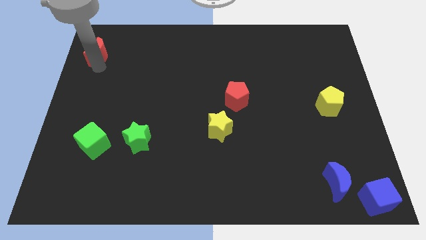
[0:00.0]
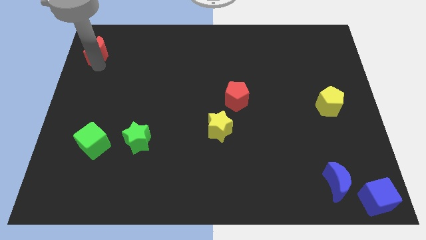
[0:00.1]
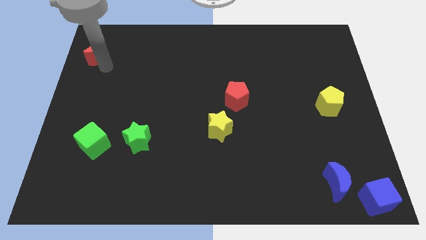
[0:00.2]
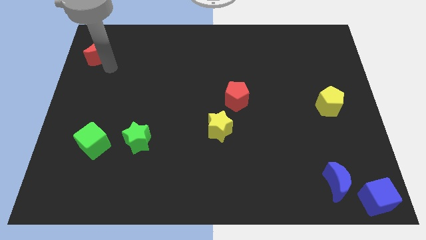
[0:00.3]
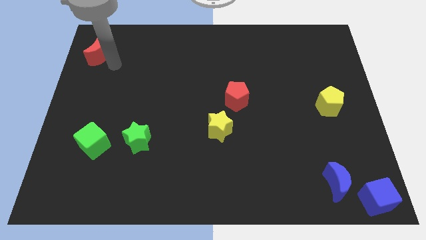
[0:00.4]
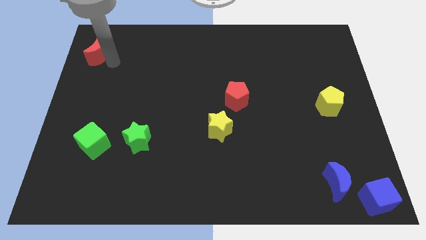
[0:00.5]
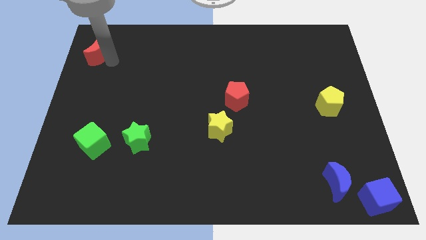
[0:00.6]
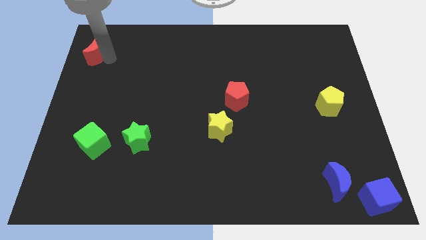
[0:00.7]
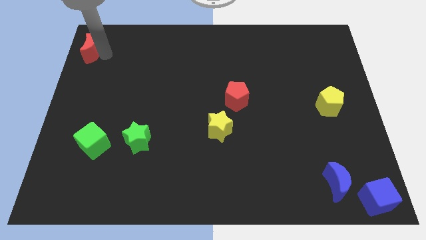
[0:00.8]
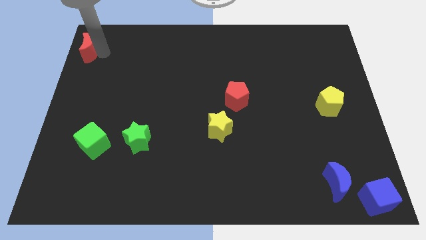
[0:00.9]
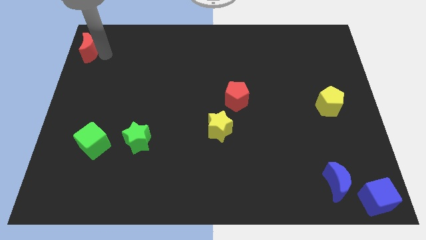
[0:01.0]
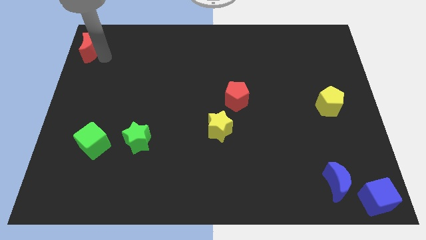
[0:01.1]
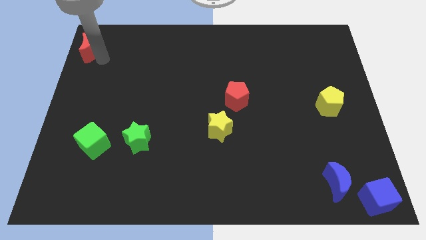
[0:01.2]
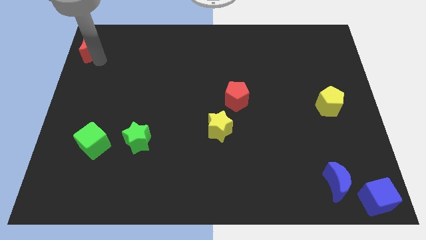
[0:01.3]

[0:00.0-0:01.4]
drag the red moon to the top left

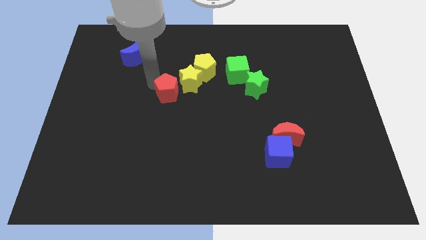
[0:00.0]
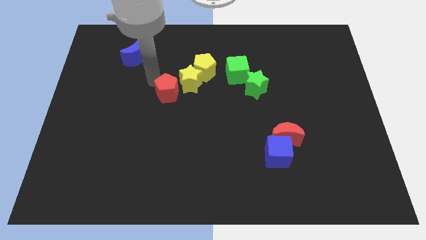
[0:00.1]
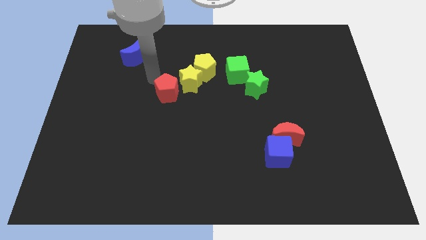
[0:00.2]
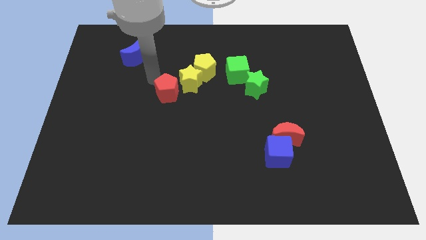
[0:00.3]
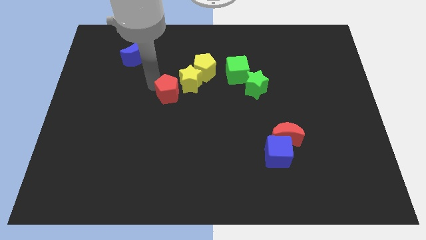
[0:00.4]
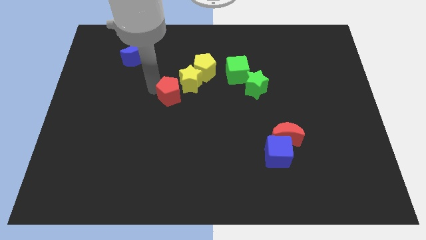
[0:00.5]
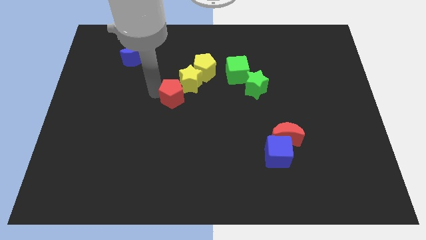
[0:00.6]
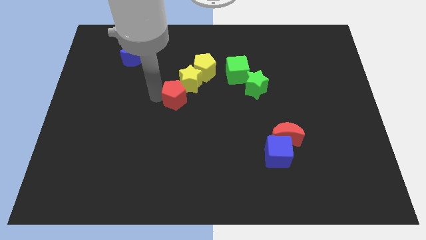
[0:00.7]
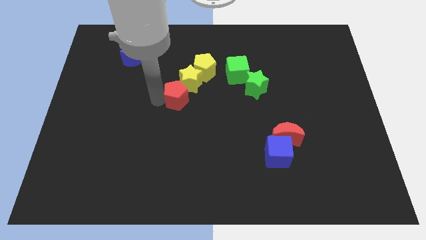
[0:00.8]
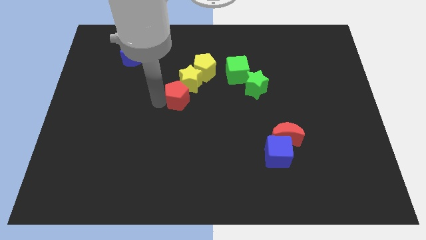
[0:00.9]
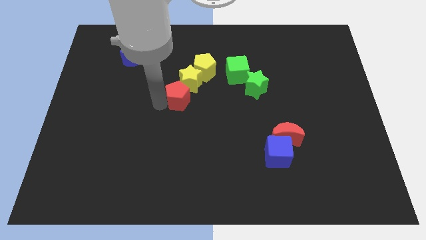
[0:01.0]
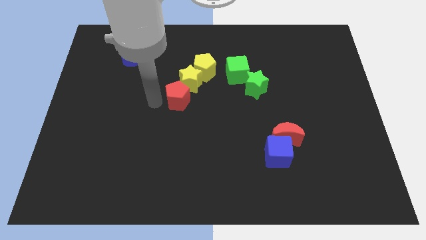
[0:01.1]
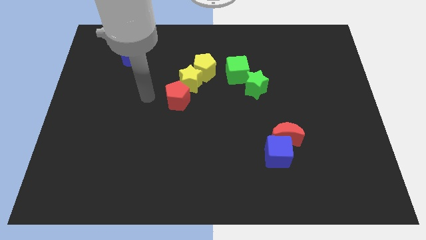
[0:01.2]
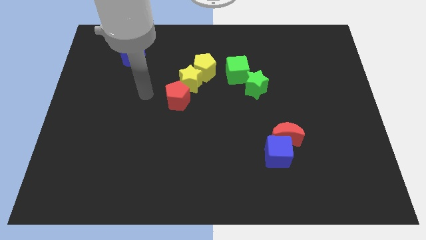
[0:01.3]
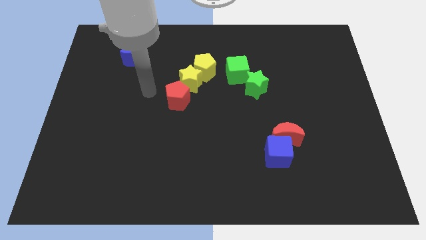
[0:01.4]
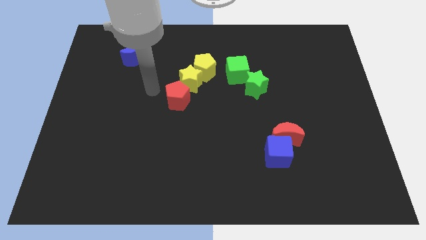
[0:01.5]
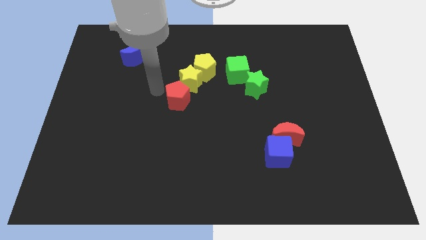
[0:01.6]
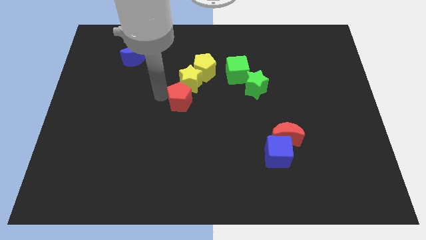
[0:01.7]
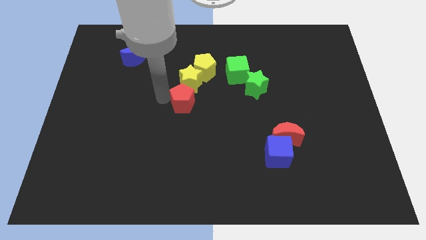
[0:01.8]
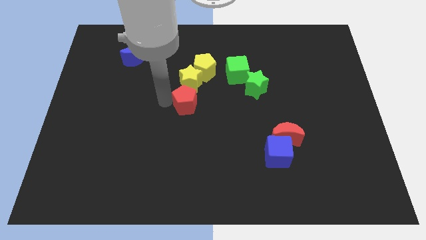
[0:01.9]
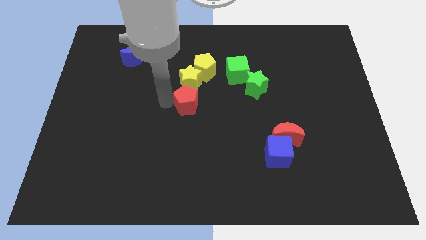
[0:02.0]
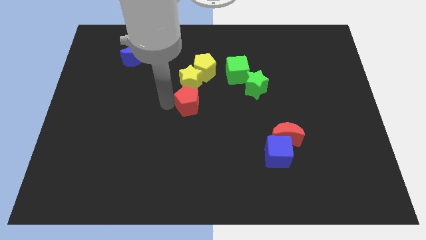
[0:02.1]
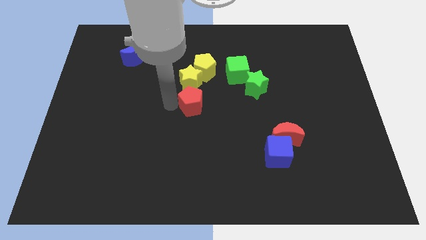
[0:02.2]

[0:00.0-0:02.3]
place the red pentagon vertically below the yellow star

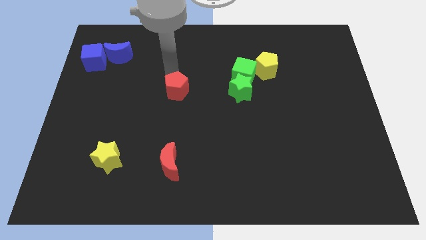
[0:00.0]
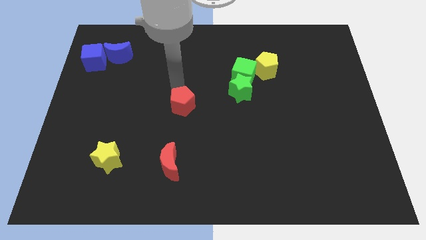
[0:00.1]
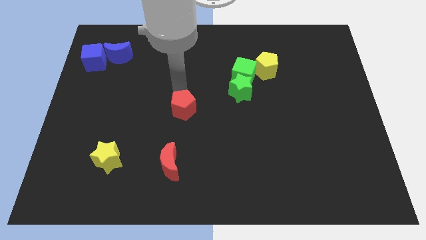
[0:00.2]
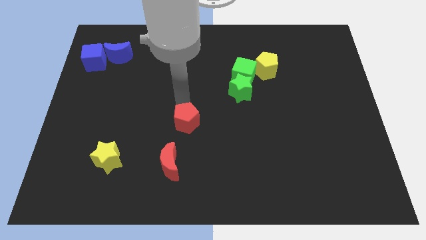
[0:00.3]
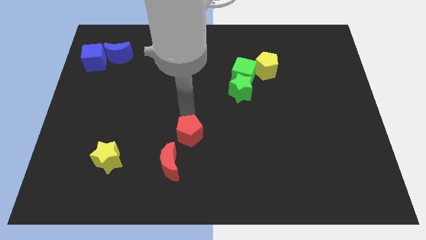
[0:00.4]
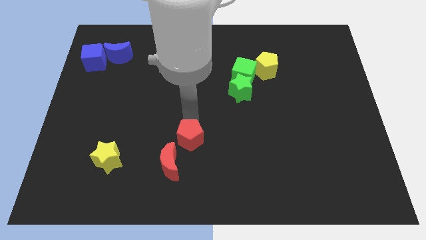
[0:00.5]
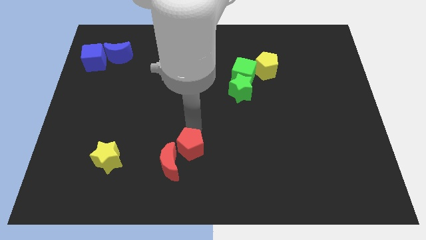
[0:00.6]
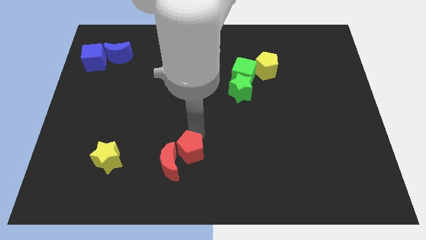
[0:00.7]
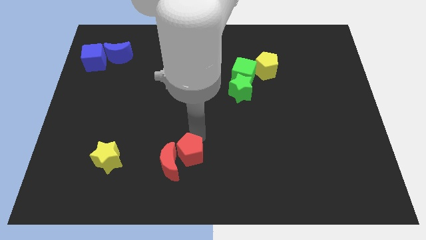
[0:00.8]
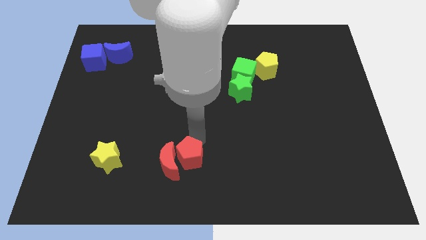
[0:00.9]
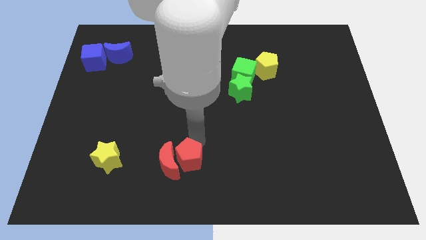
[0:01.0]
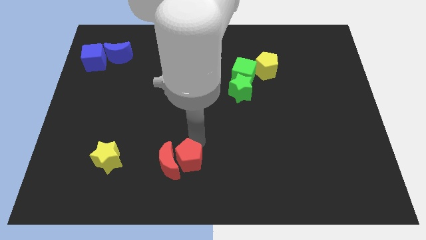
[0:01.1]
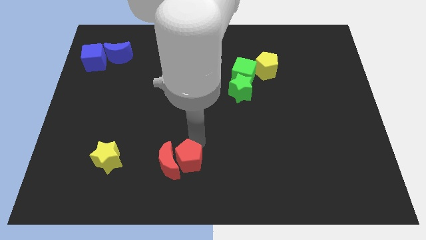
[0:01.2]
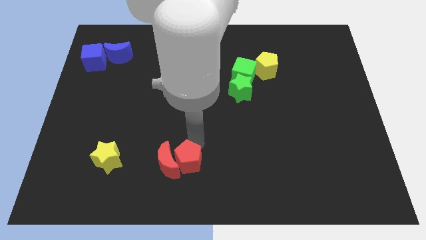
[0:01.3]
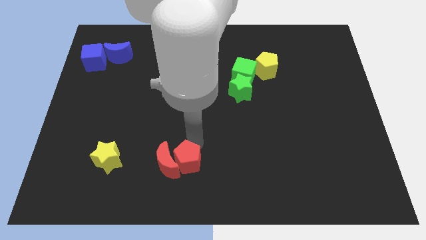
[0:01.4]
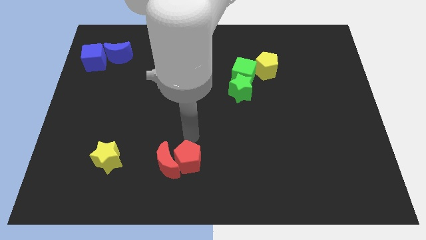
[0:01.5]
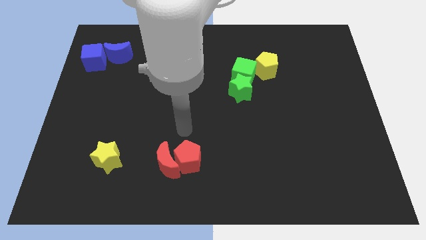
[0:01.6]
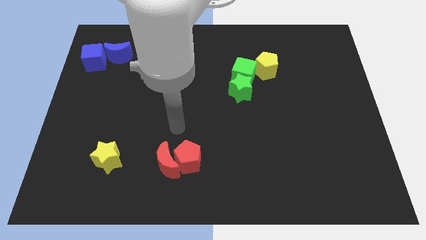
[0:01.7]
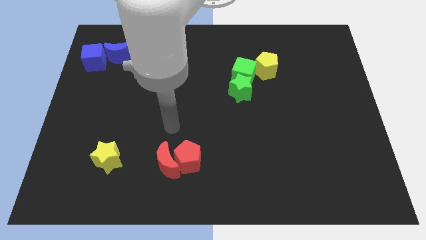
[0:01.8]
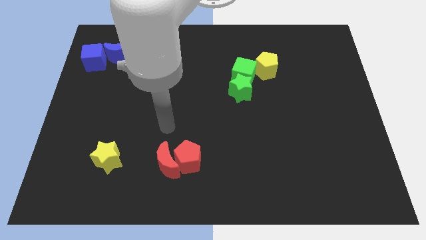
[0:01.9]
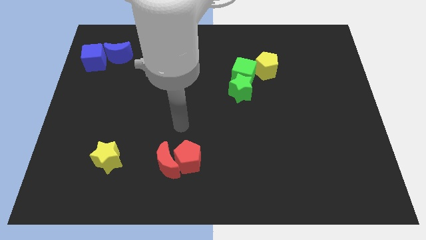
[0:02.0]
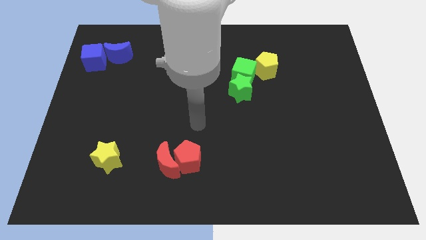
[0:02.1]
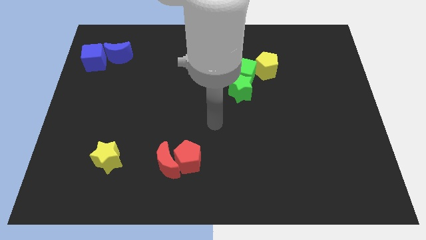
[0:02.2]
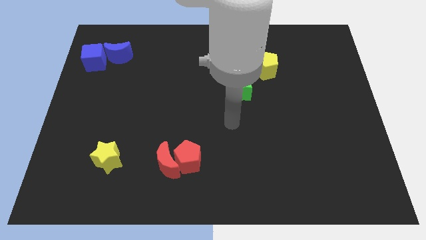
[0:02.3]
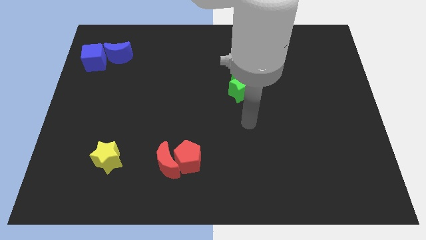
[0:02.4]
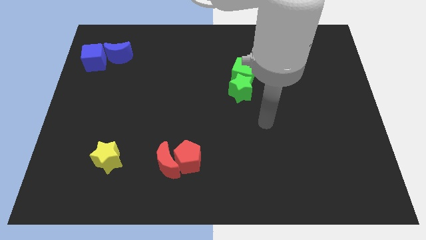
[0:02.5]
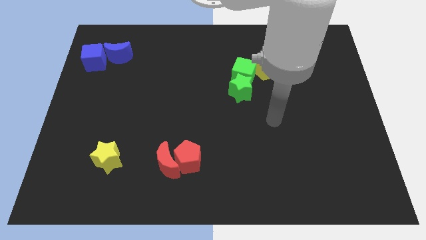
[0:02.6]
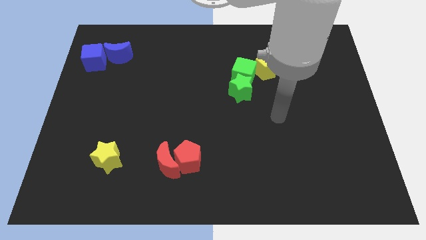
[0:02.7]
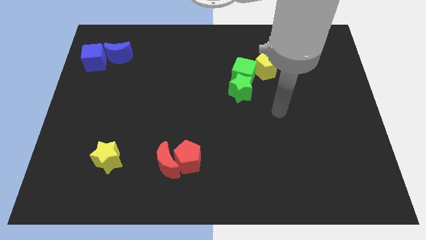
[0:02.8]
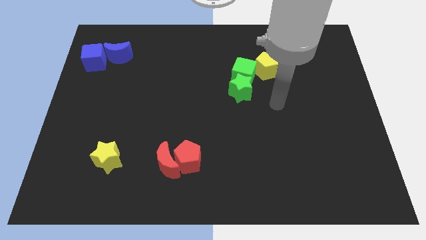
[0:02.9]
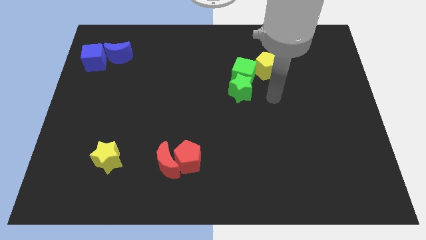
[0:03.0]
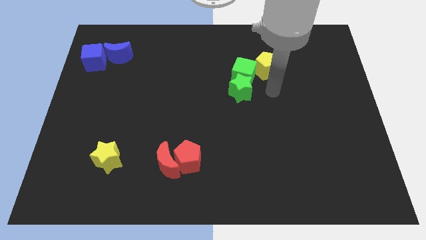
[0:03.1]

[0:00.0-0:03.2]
move the red pentagon into the red moon

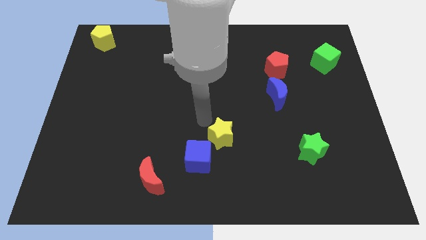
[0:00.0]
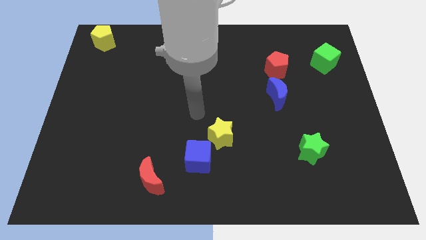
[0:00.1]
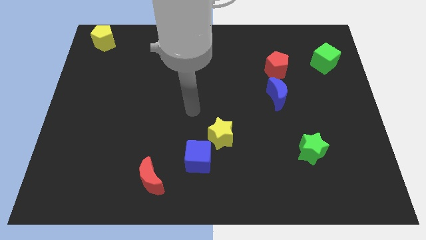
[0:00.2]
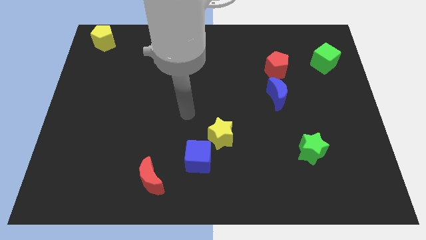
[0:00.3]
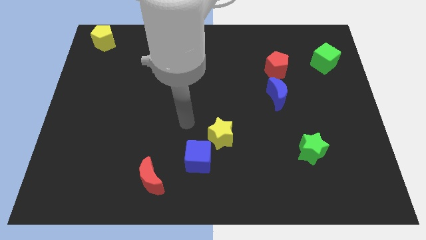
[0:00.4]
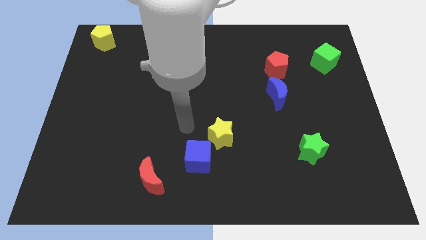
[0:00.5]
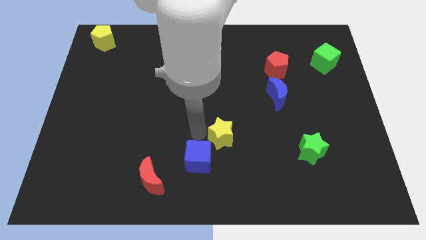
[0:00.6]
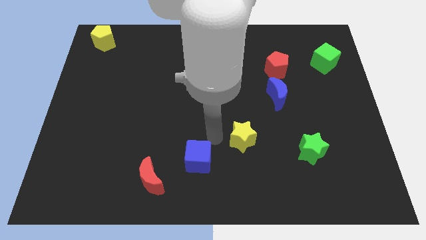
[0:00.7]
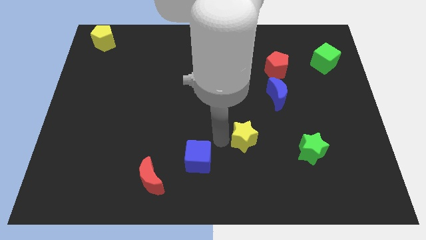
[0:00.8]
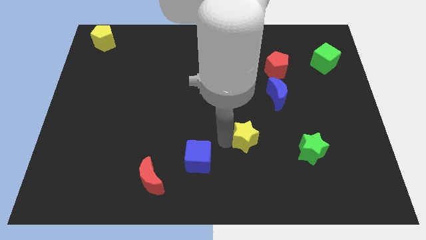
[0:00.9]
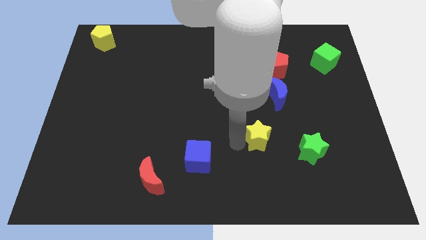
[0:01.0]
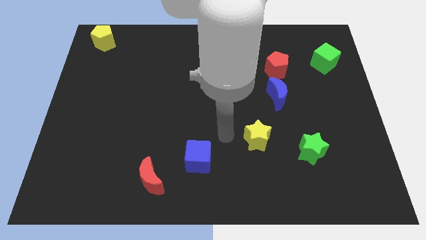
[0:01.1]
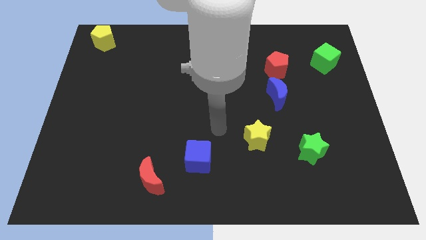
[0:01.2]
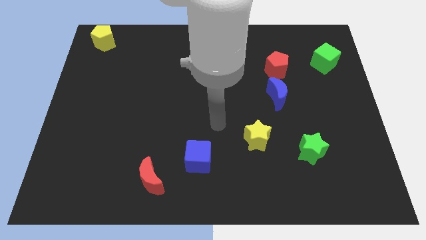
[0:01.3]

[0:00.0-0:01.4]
slide the yellow star slightly to the right

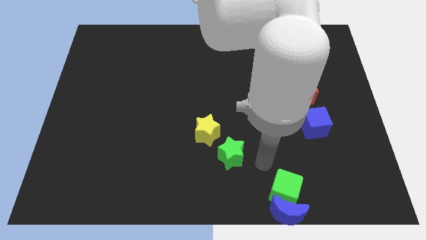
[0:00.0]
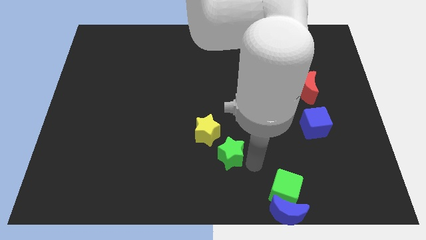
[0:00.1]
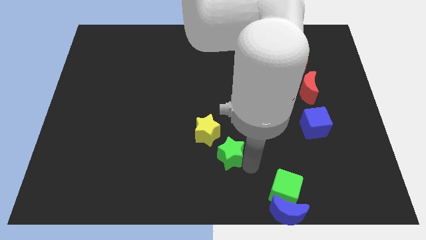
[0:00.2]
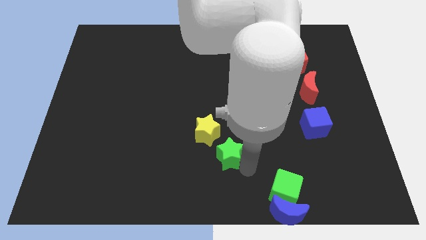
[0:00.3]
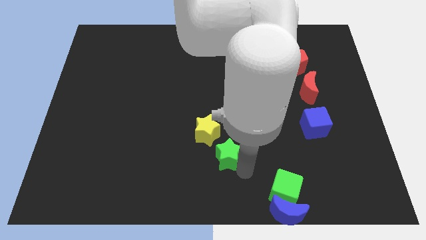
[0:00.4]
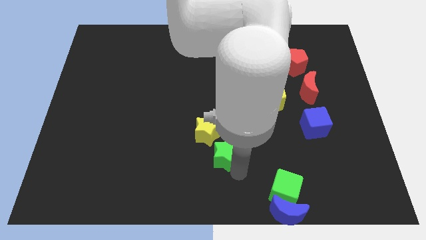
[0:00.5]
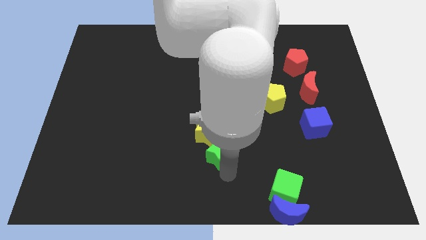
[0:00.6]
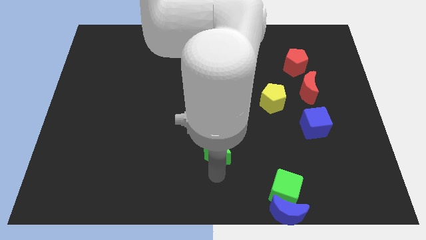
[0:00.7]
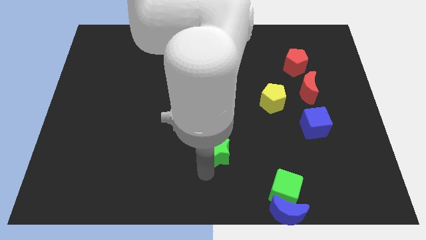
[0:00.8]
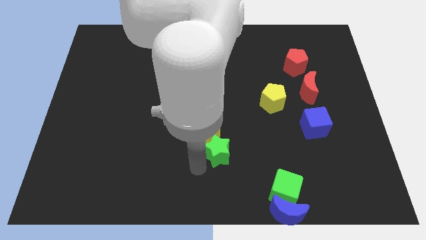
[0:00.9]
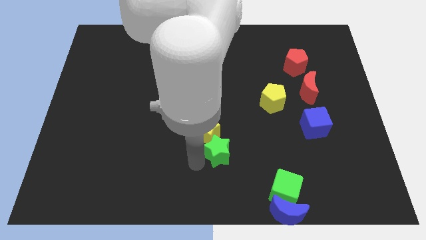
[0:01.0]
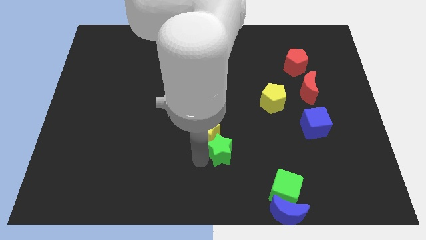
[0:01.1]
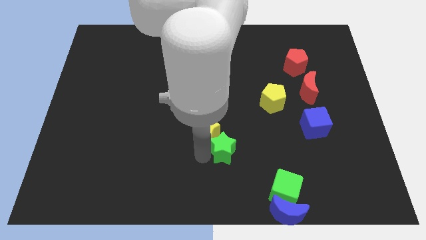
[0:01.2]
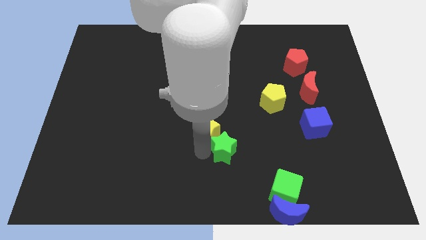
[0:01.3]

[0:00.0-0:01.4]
move the green star close to the yellow star
